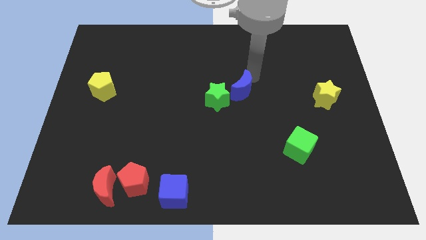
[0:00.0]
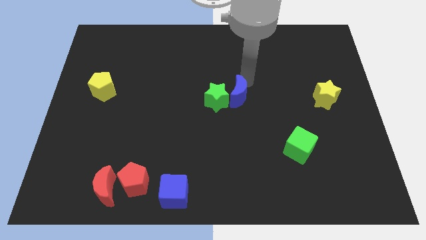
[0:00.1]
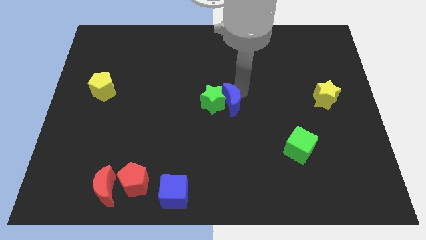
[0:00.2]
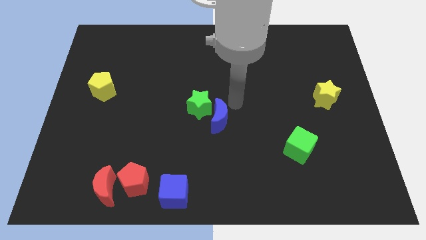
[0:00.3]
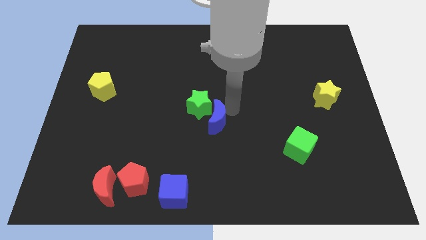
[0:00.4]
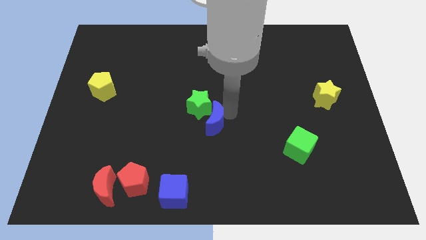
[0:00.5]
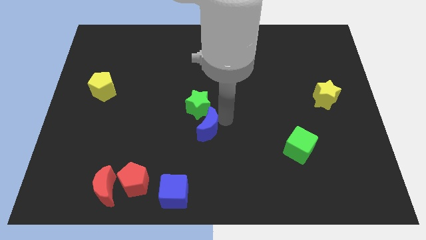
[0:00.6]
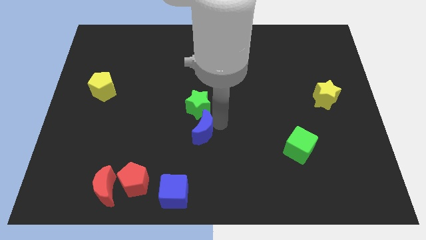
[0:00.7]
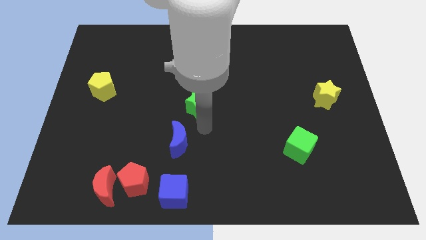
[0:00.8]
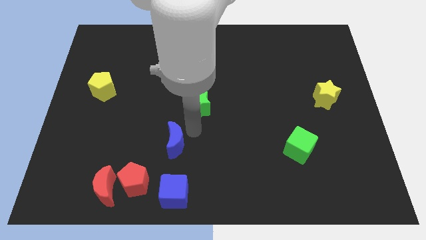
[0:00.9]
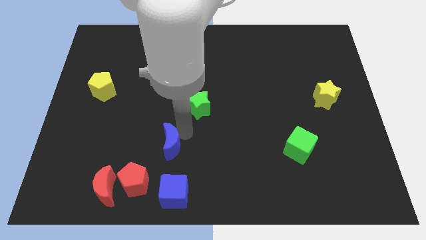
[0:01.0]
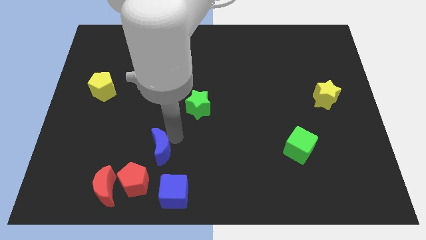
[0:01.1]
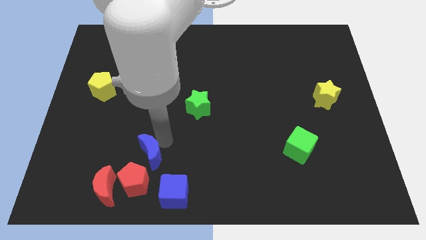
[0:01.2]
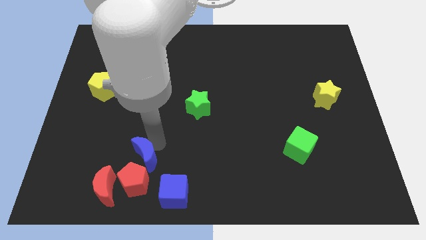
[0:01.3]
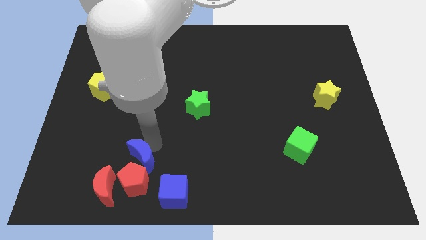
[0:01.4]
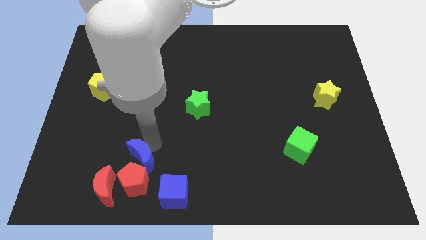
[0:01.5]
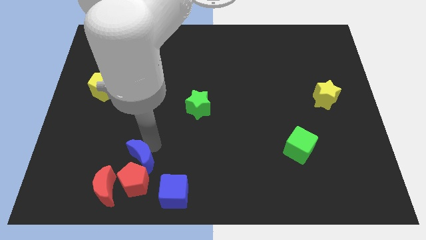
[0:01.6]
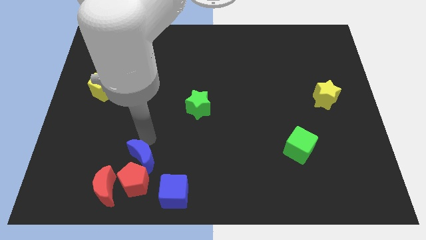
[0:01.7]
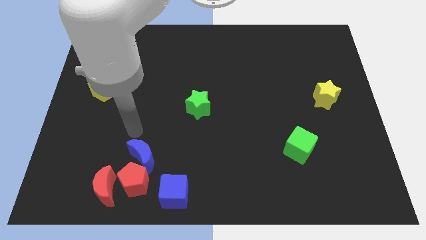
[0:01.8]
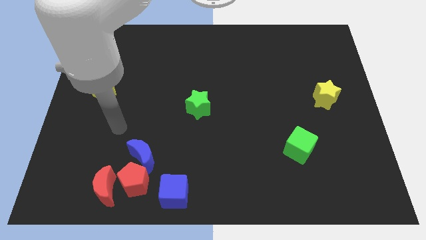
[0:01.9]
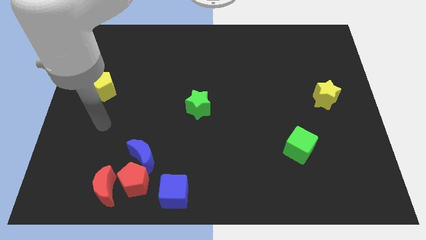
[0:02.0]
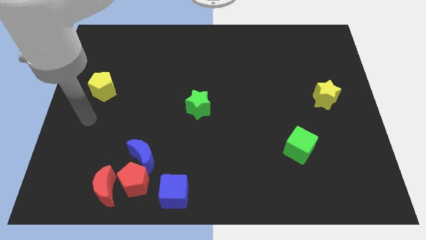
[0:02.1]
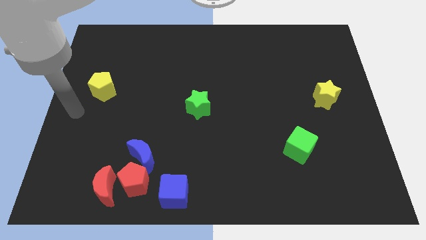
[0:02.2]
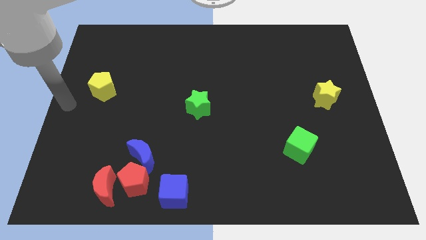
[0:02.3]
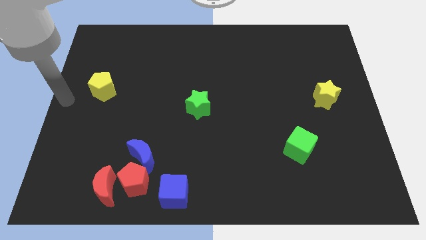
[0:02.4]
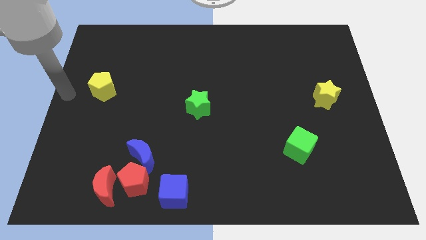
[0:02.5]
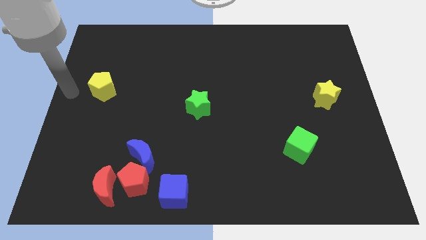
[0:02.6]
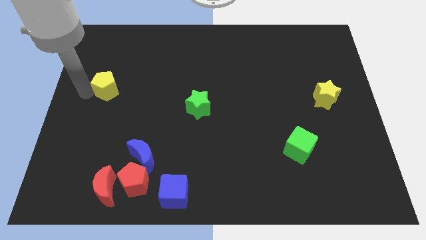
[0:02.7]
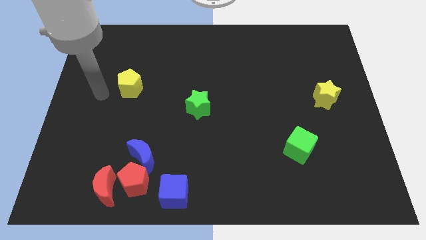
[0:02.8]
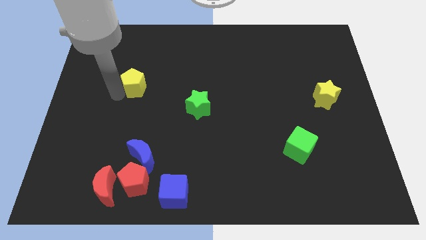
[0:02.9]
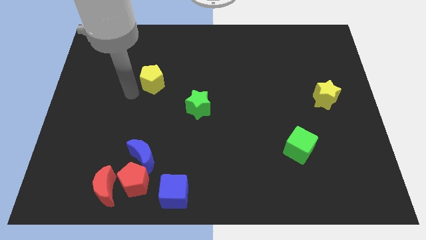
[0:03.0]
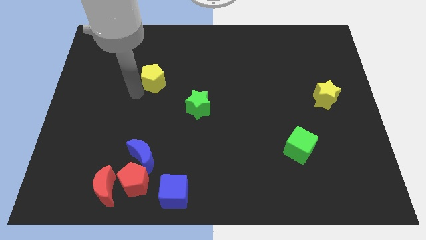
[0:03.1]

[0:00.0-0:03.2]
put the blue crescent and yellow pentagon vertically on the top side of the red pentagon

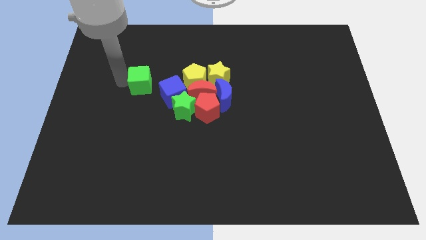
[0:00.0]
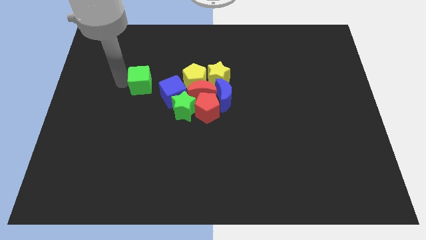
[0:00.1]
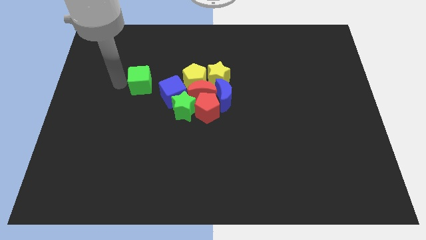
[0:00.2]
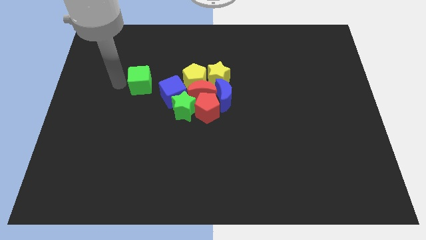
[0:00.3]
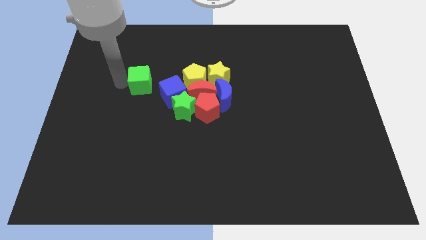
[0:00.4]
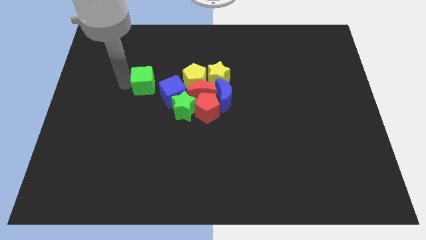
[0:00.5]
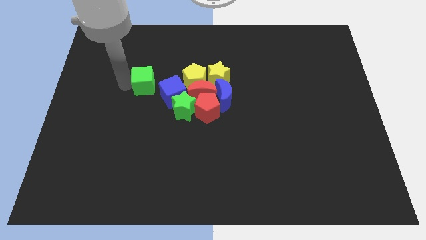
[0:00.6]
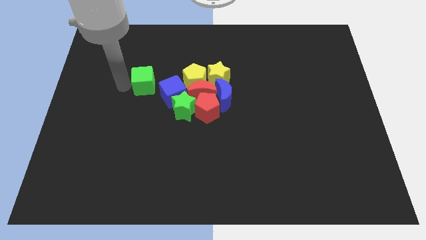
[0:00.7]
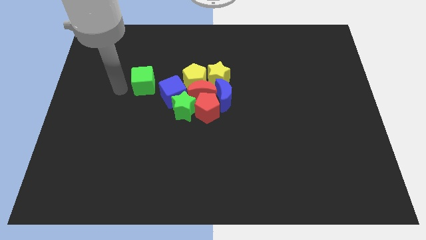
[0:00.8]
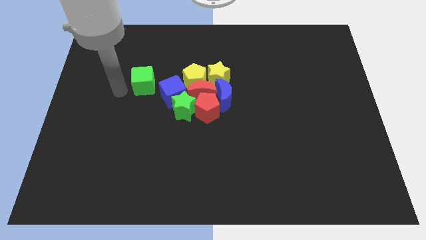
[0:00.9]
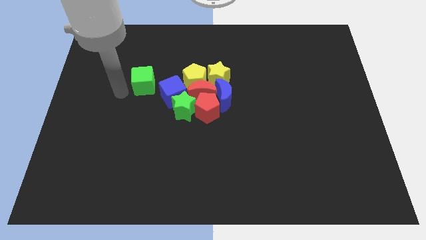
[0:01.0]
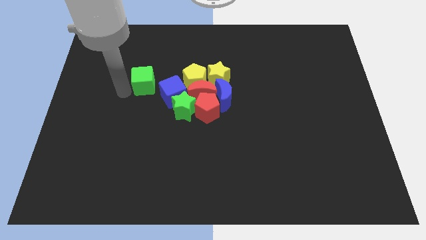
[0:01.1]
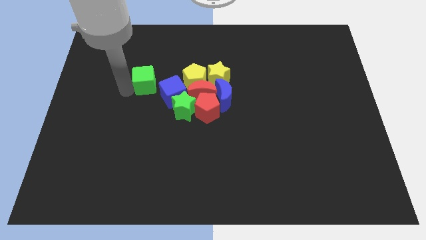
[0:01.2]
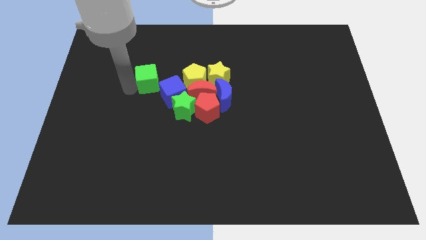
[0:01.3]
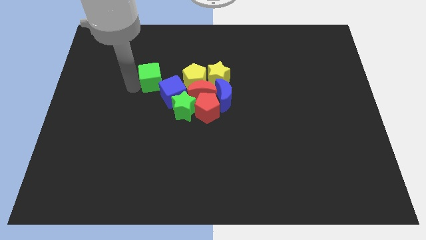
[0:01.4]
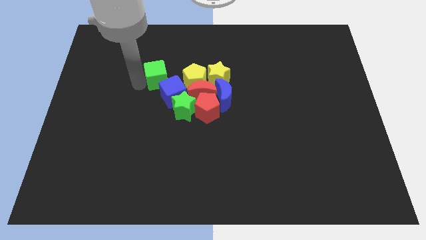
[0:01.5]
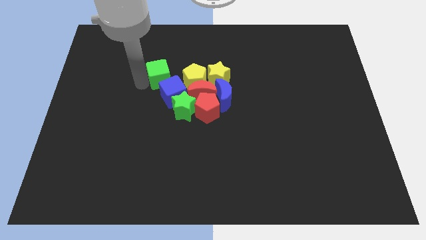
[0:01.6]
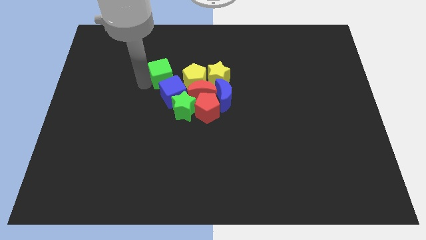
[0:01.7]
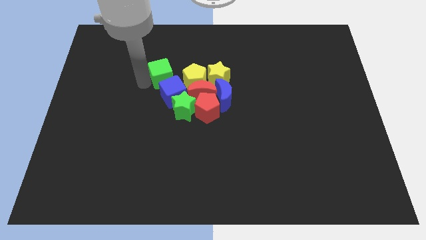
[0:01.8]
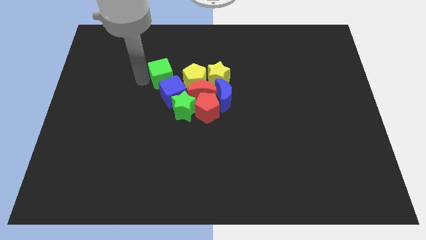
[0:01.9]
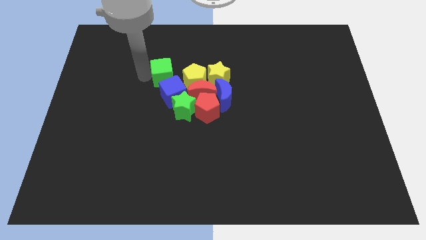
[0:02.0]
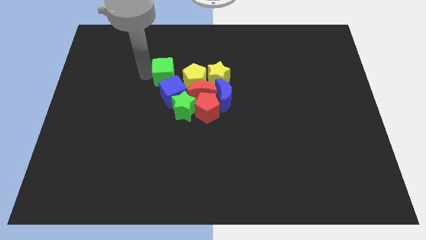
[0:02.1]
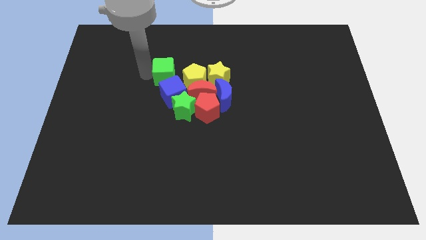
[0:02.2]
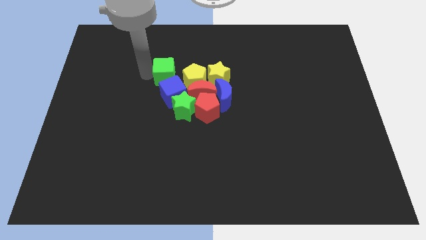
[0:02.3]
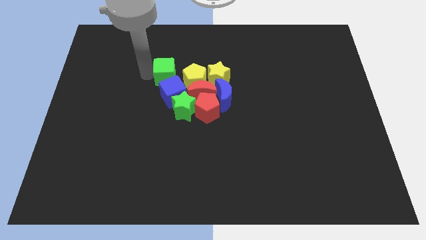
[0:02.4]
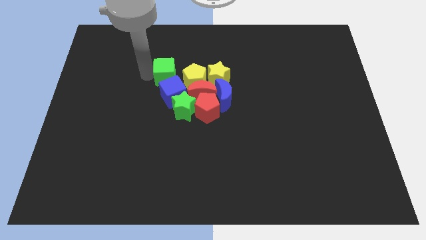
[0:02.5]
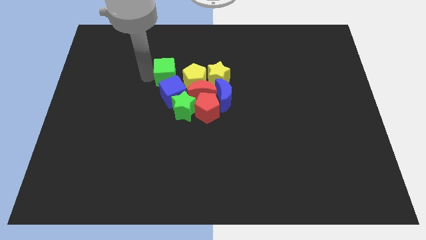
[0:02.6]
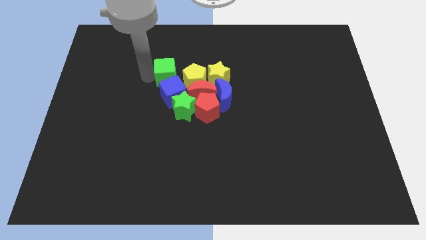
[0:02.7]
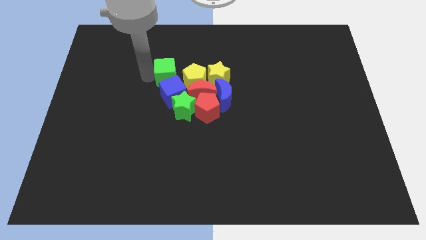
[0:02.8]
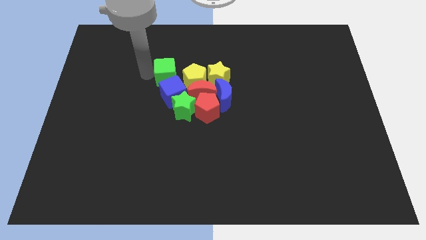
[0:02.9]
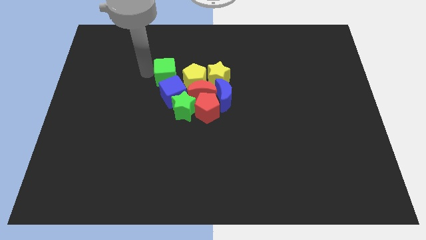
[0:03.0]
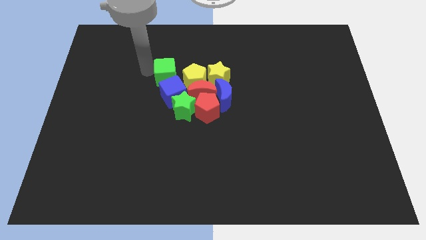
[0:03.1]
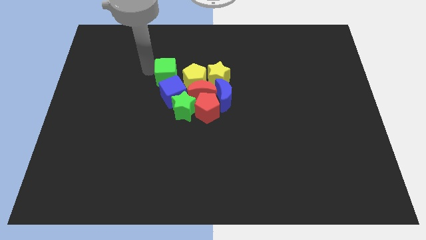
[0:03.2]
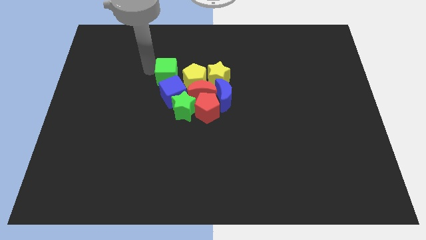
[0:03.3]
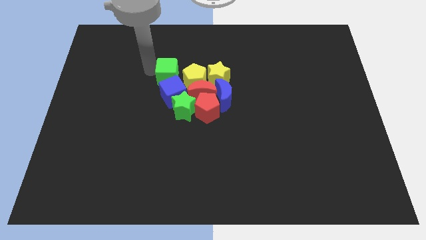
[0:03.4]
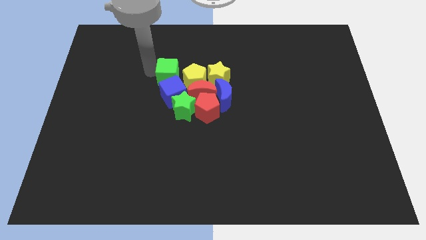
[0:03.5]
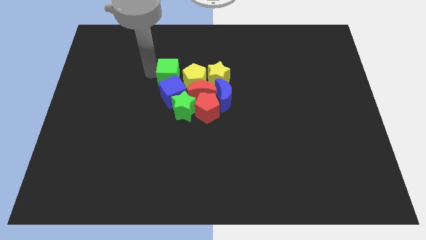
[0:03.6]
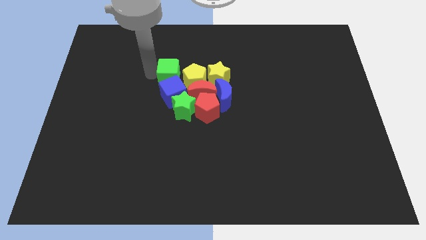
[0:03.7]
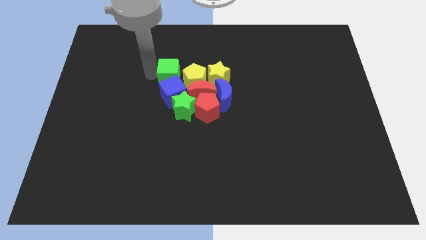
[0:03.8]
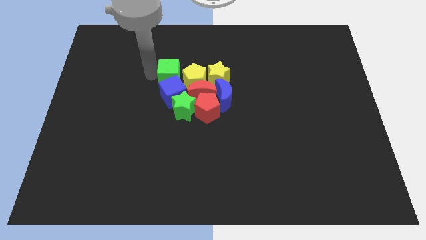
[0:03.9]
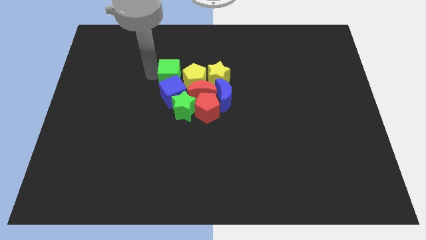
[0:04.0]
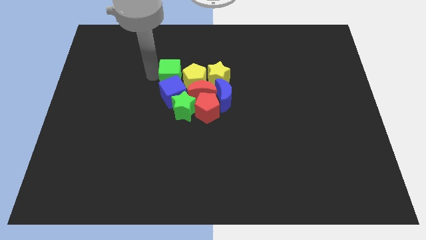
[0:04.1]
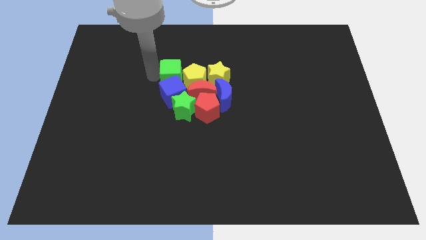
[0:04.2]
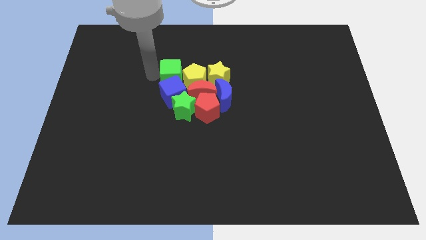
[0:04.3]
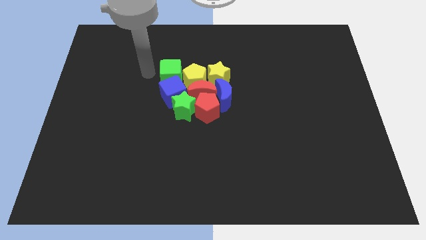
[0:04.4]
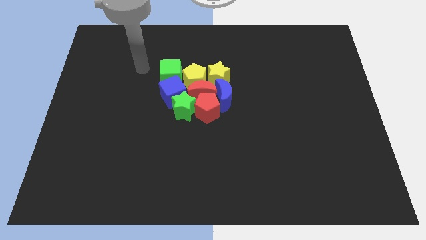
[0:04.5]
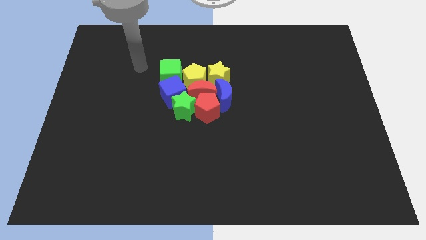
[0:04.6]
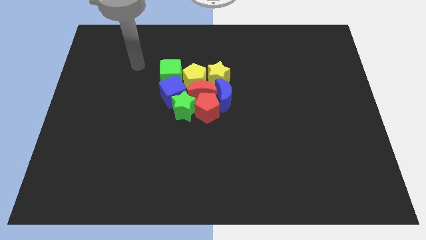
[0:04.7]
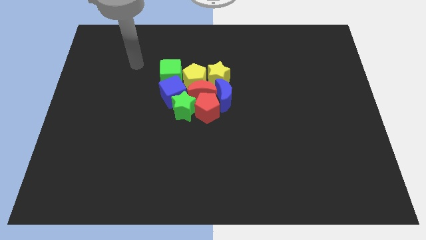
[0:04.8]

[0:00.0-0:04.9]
push the green cube to the top of the blue cube

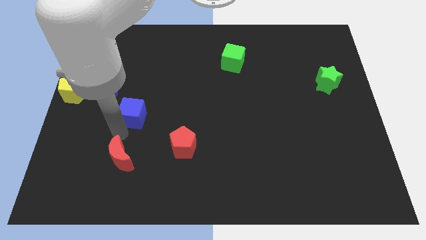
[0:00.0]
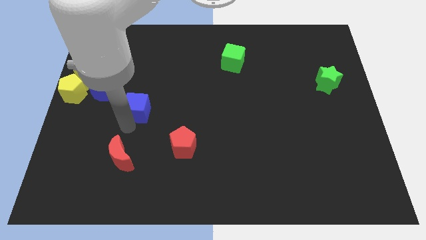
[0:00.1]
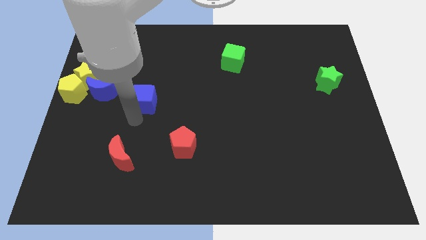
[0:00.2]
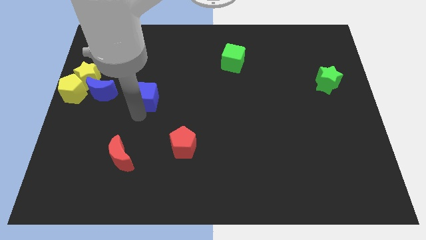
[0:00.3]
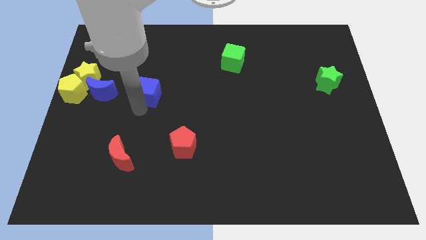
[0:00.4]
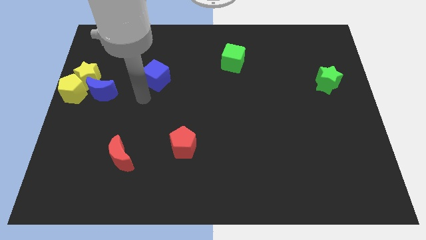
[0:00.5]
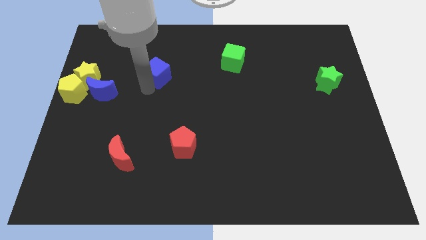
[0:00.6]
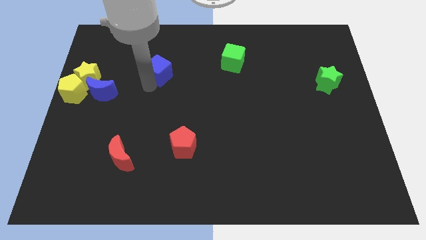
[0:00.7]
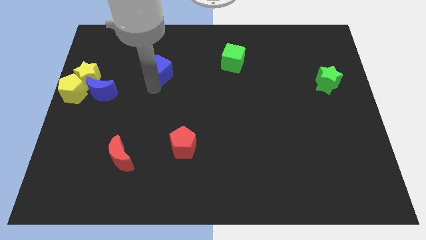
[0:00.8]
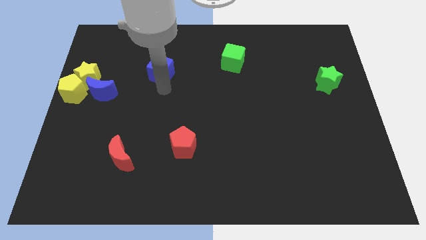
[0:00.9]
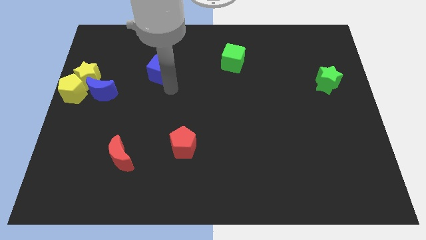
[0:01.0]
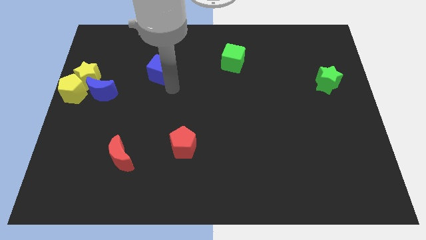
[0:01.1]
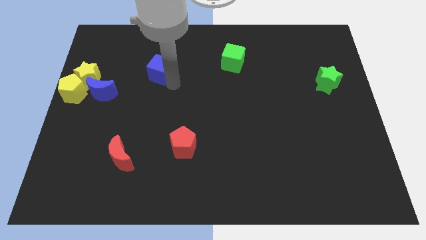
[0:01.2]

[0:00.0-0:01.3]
place blue cube in between green cube and blue moon
